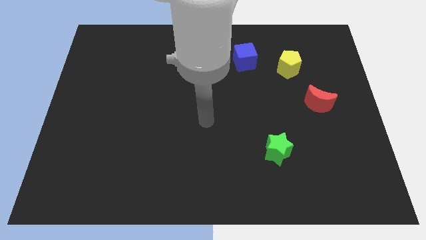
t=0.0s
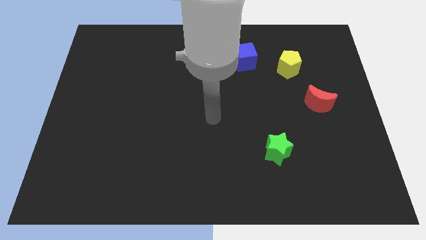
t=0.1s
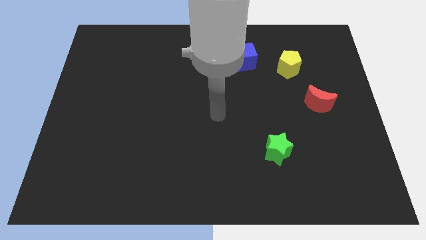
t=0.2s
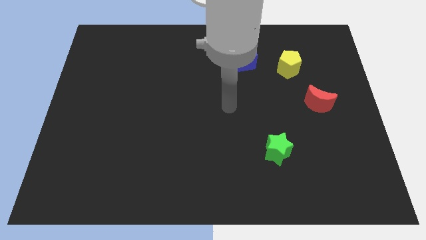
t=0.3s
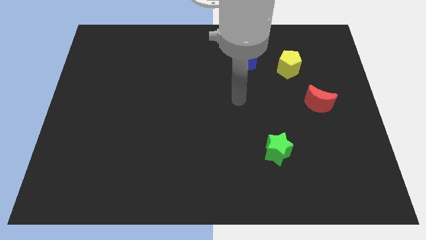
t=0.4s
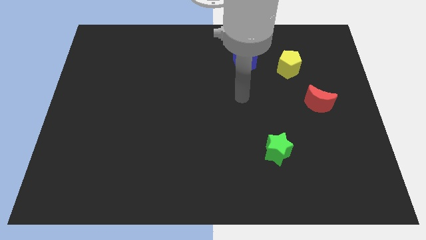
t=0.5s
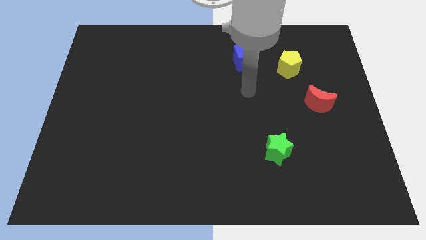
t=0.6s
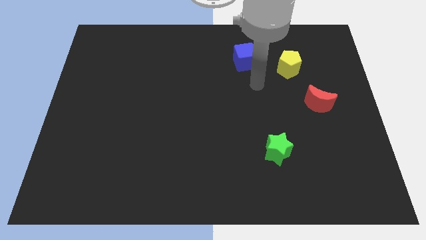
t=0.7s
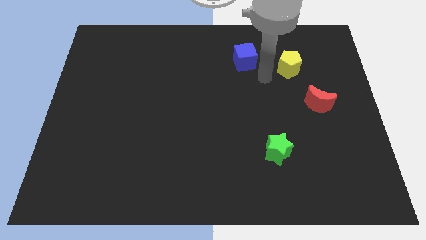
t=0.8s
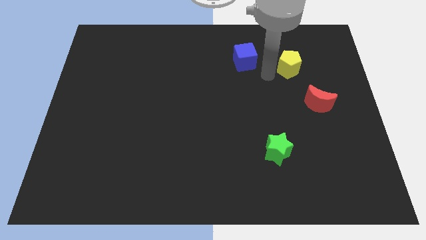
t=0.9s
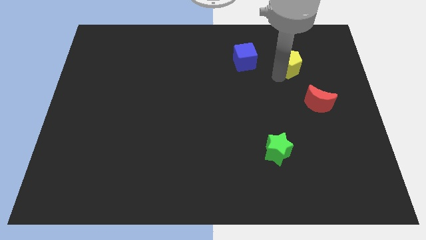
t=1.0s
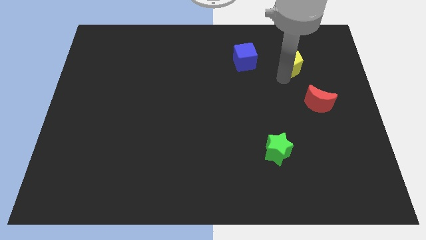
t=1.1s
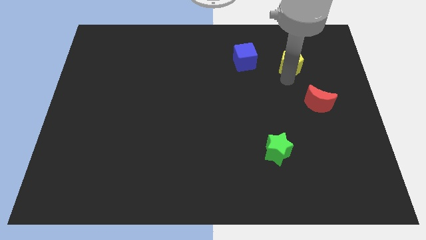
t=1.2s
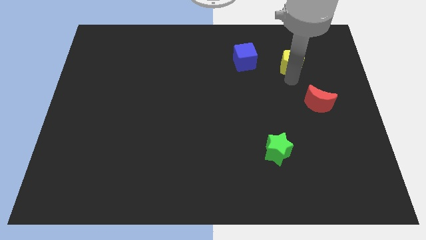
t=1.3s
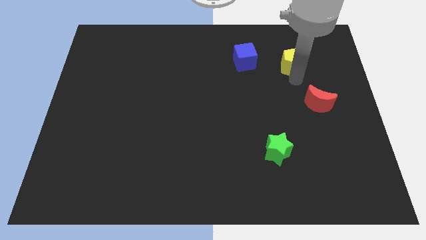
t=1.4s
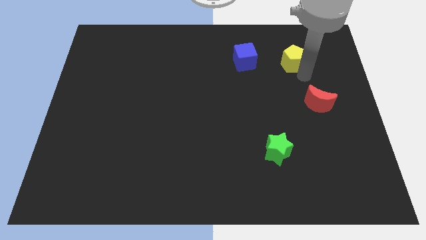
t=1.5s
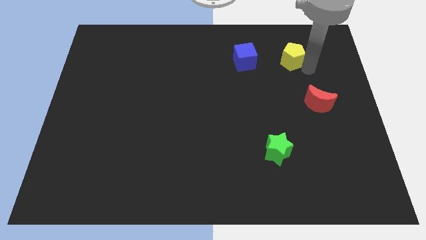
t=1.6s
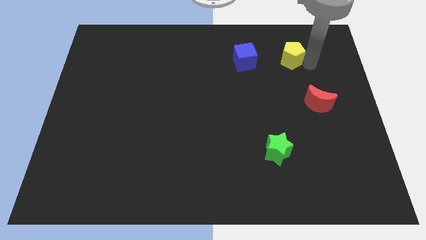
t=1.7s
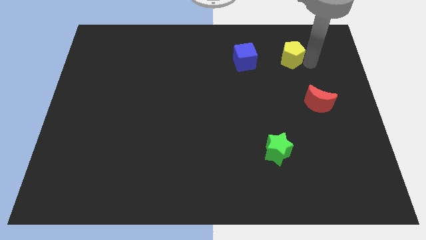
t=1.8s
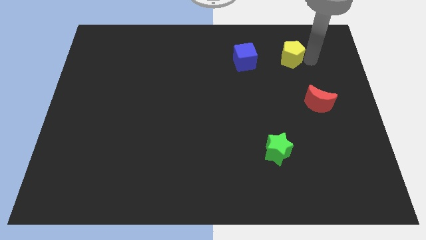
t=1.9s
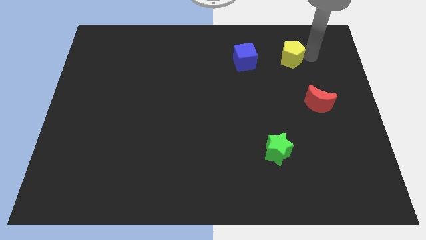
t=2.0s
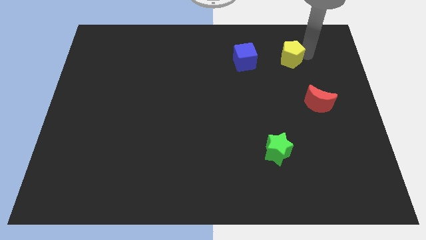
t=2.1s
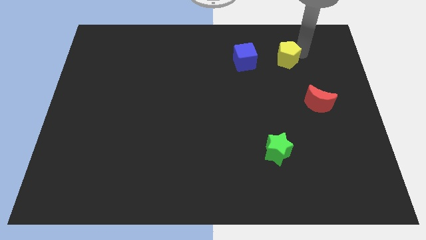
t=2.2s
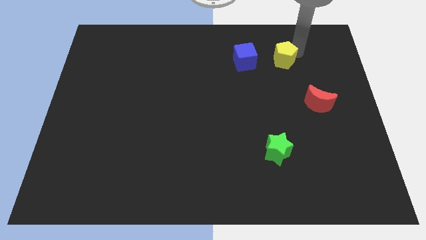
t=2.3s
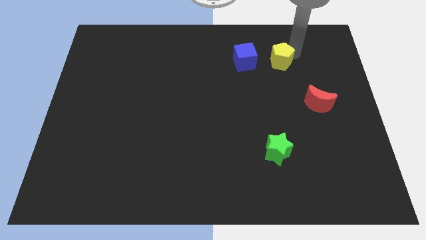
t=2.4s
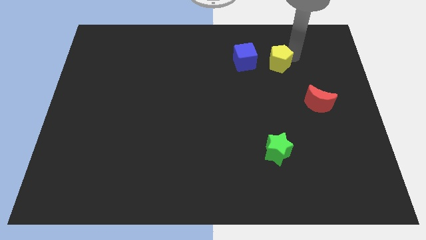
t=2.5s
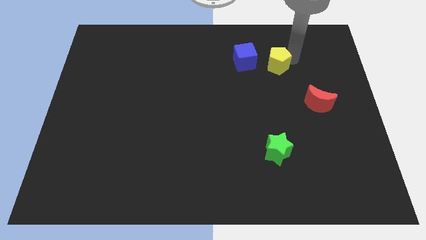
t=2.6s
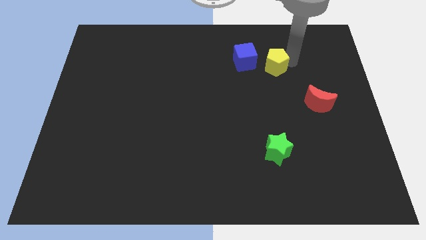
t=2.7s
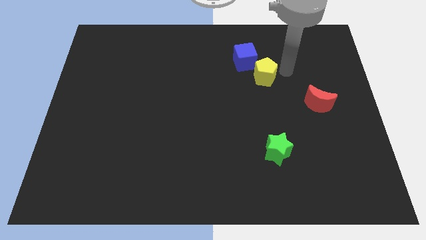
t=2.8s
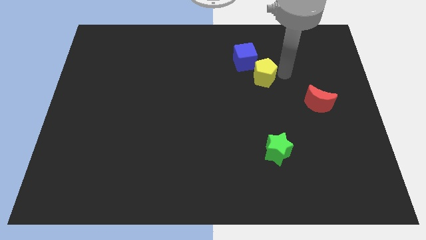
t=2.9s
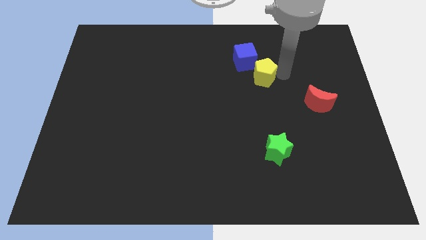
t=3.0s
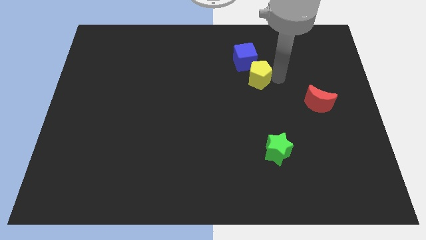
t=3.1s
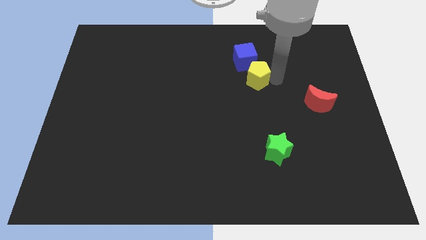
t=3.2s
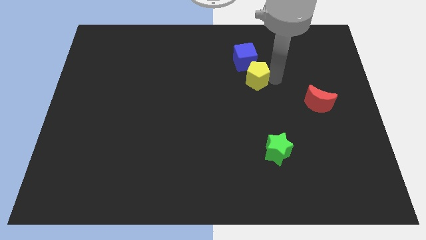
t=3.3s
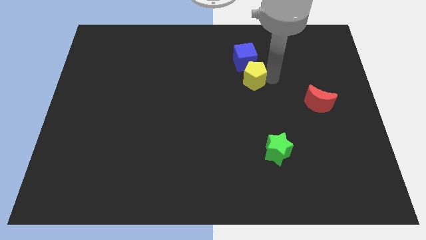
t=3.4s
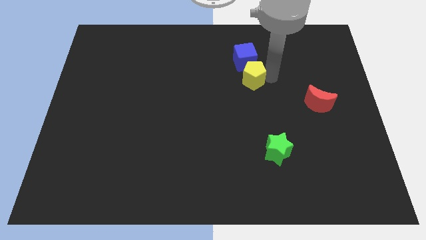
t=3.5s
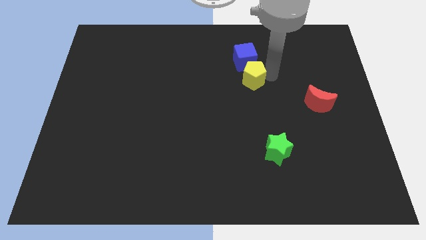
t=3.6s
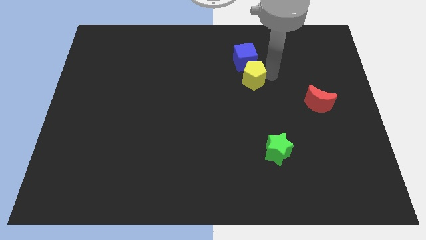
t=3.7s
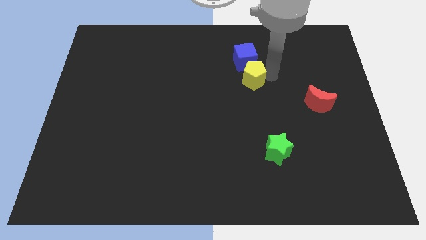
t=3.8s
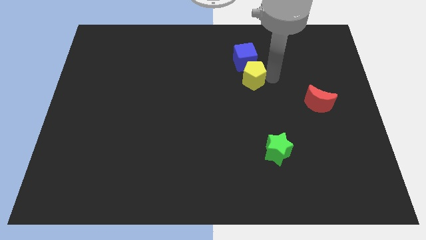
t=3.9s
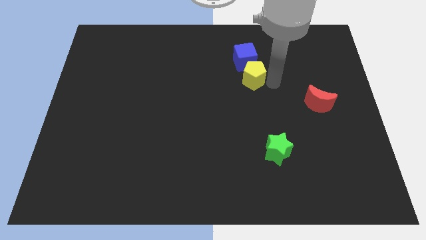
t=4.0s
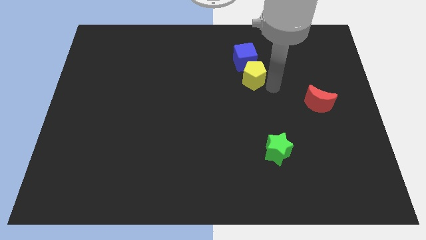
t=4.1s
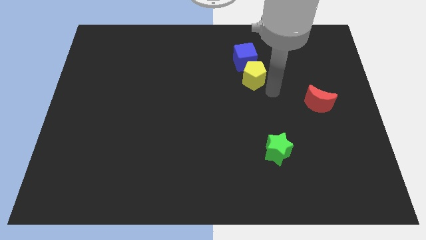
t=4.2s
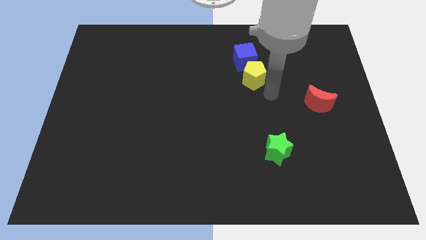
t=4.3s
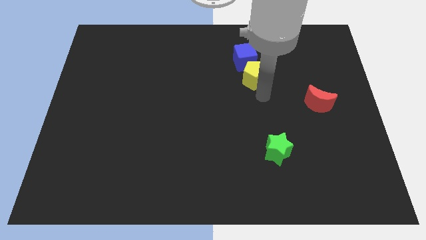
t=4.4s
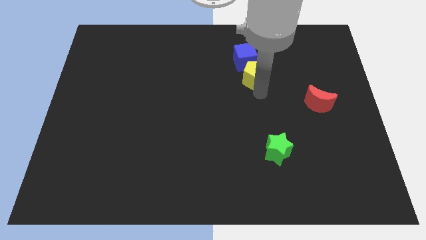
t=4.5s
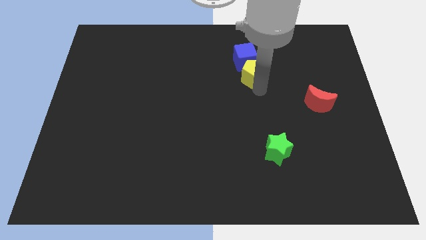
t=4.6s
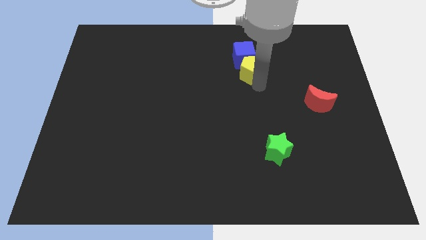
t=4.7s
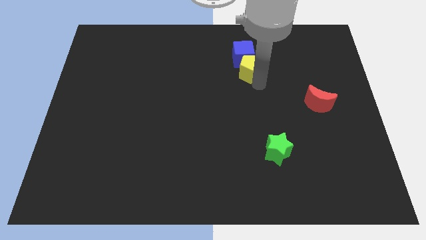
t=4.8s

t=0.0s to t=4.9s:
slide the yellow block close to the cube

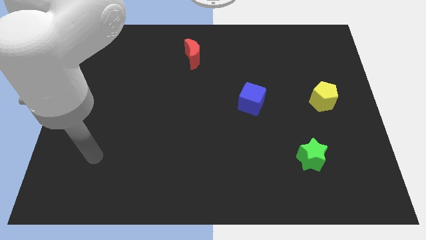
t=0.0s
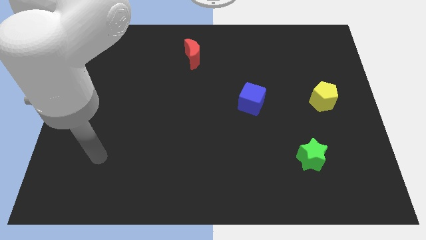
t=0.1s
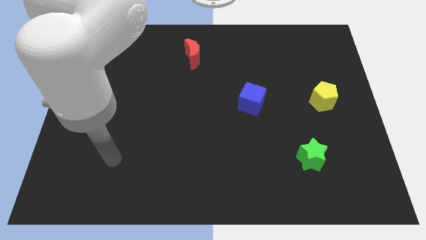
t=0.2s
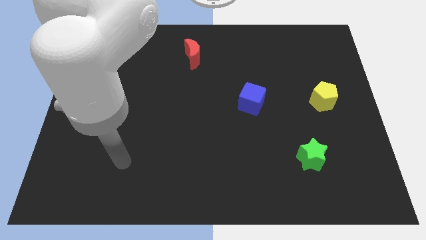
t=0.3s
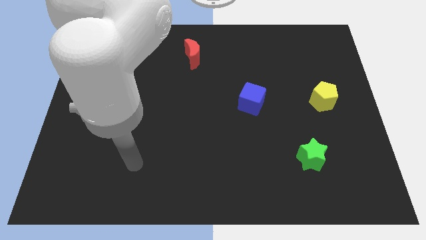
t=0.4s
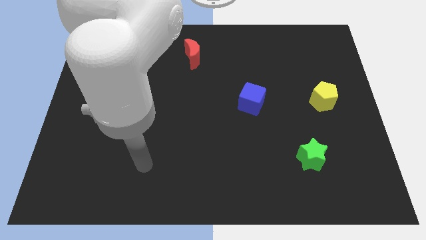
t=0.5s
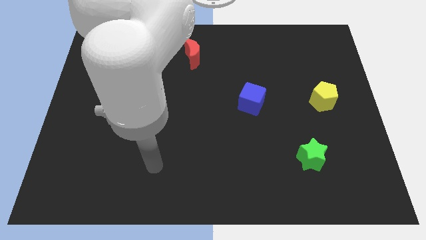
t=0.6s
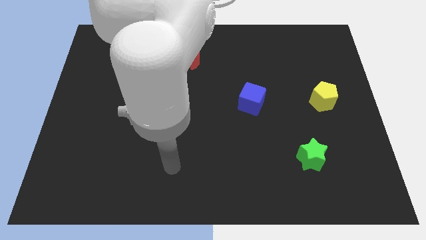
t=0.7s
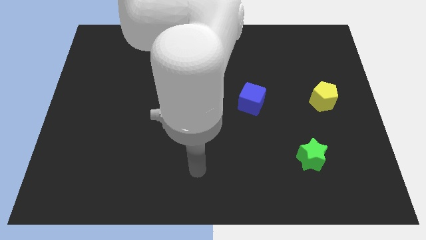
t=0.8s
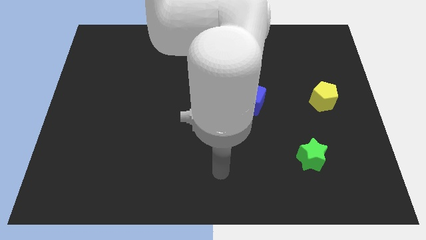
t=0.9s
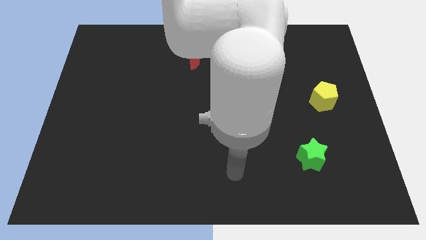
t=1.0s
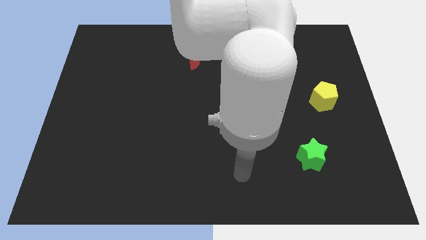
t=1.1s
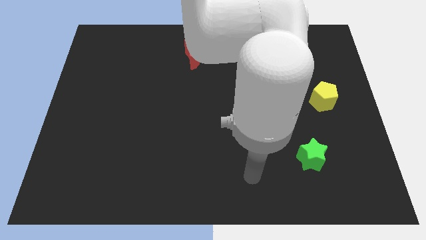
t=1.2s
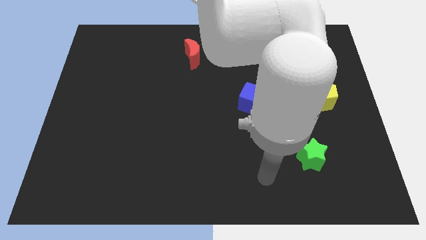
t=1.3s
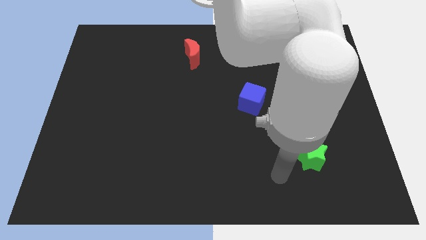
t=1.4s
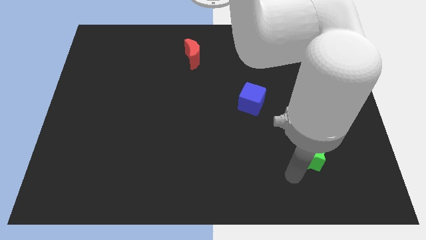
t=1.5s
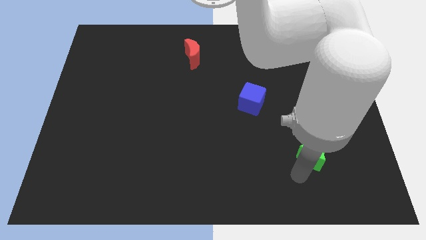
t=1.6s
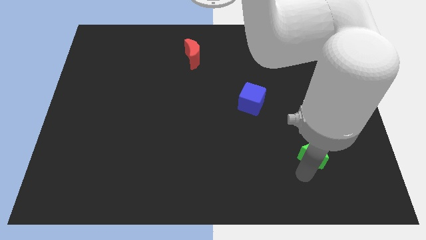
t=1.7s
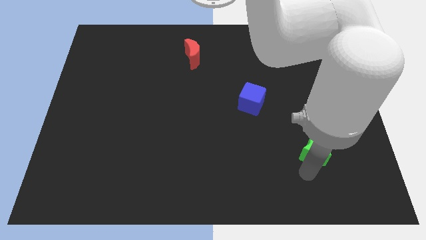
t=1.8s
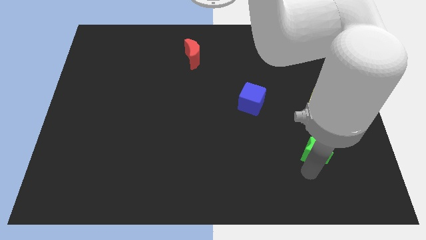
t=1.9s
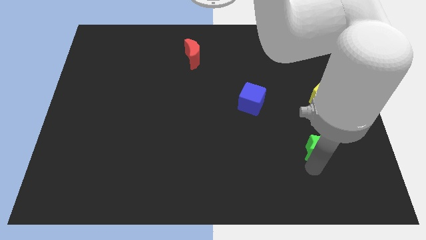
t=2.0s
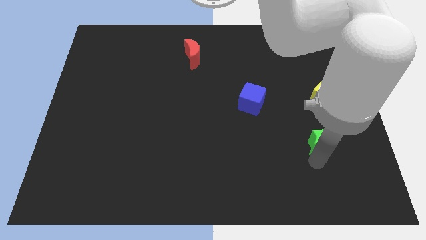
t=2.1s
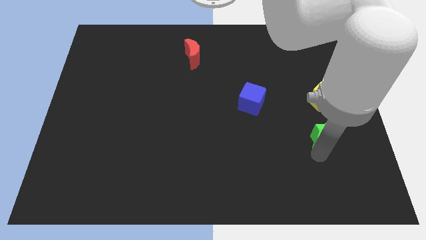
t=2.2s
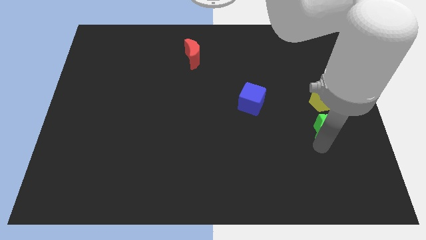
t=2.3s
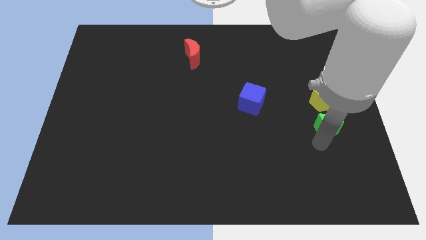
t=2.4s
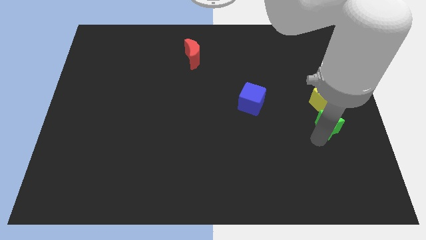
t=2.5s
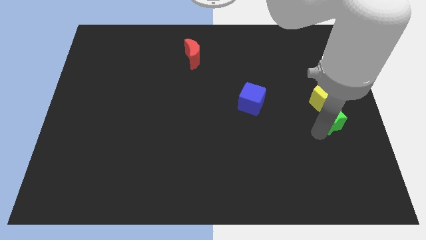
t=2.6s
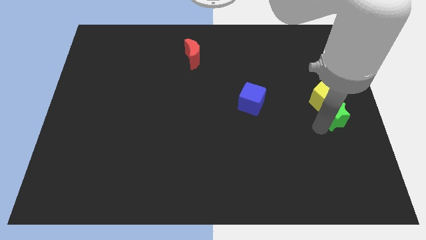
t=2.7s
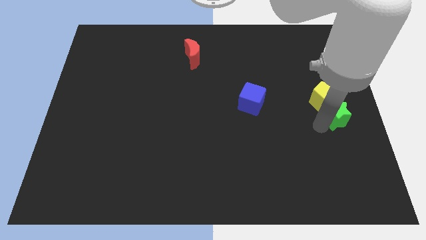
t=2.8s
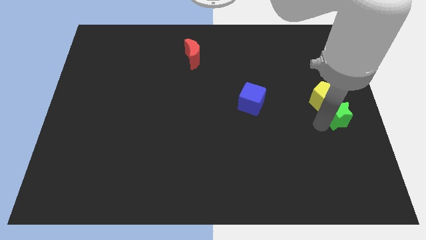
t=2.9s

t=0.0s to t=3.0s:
put the green star towards the yellow pentagon

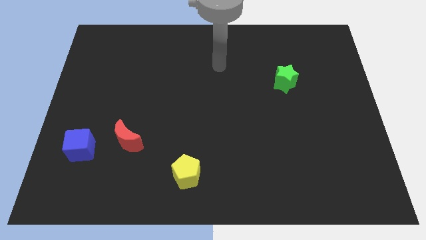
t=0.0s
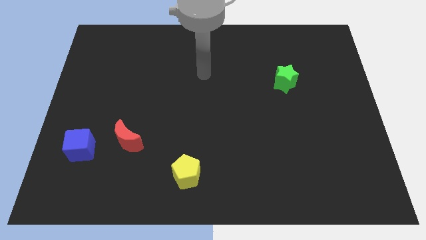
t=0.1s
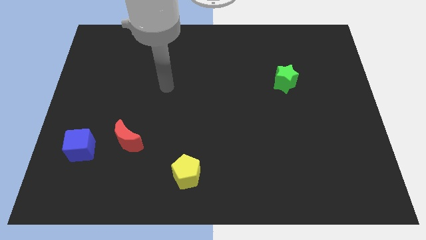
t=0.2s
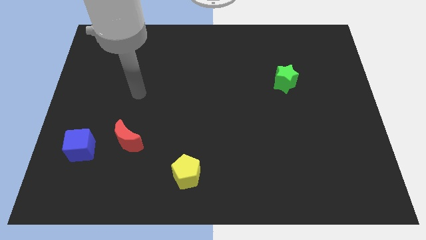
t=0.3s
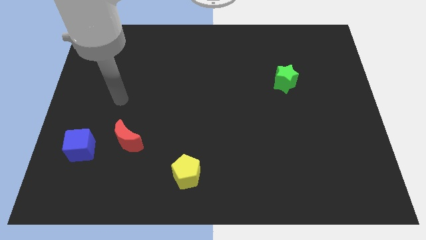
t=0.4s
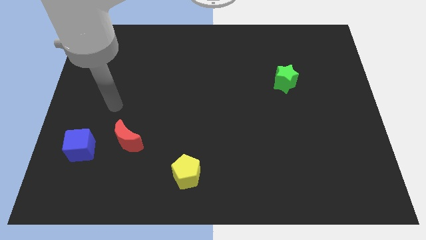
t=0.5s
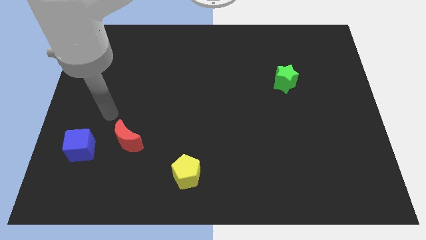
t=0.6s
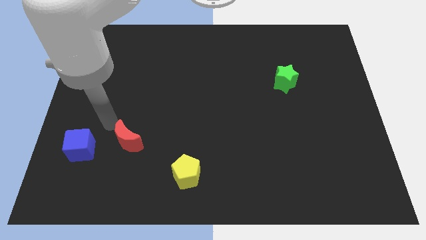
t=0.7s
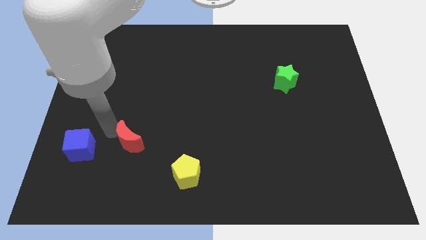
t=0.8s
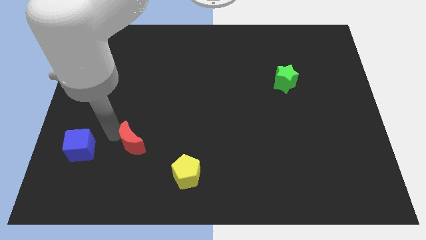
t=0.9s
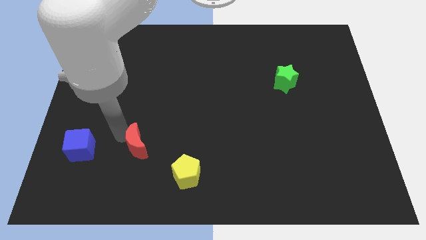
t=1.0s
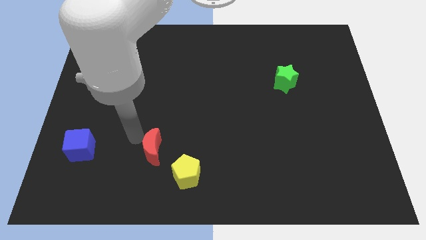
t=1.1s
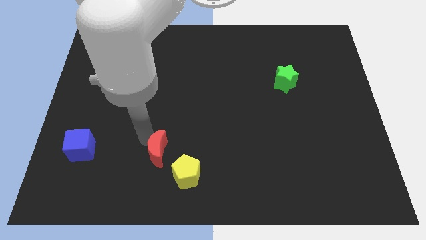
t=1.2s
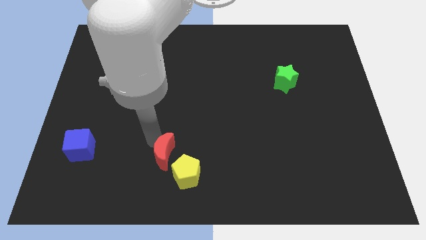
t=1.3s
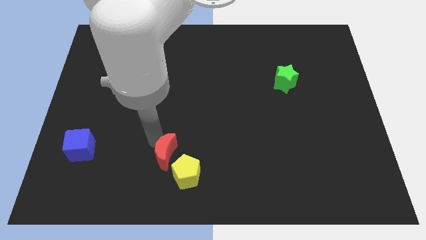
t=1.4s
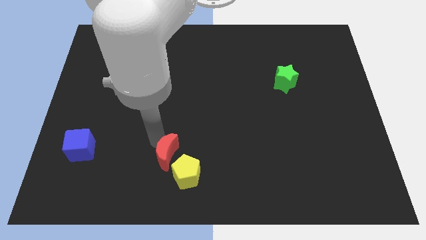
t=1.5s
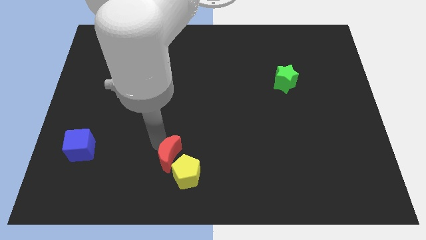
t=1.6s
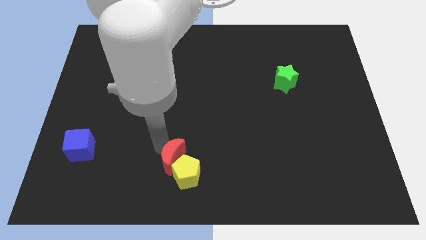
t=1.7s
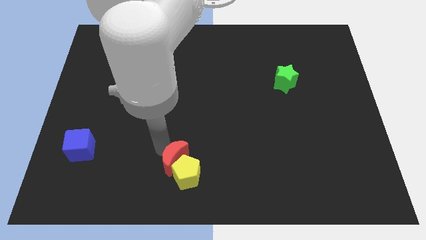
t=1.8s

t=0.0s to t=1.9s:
put the red block next to the pentagon
